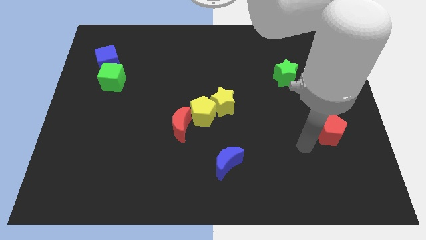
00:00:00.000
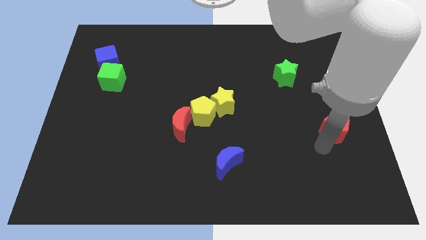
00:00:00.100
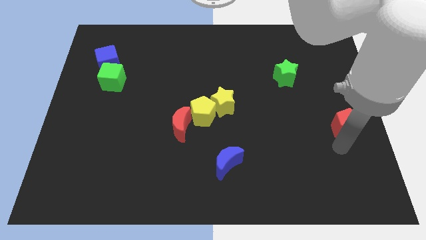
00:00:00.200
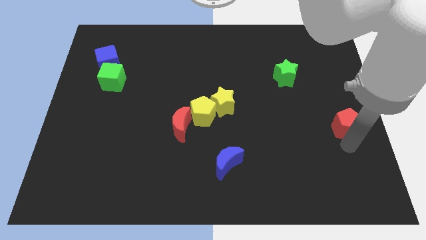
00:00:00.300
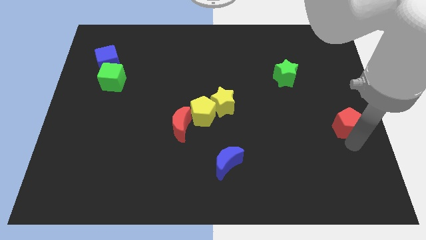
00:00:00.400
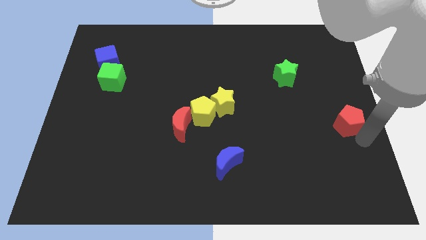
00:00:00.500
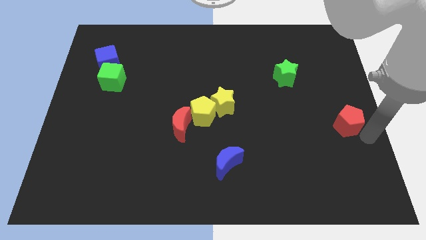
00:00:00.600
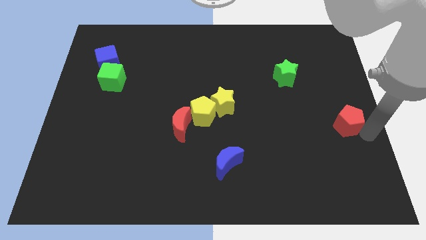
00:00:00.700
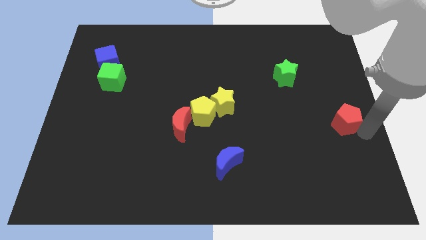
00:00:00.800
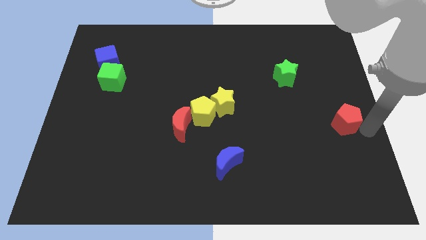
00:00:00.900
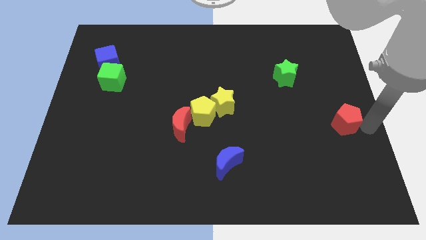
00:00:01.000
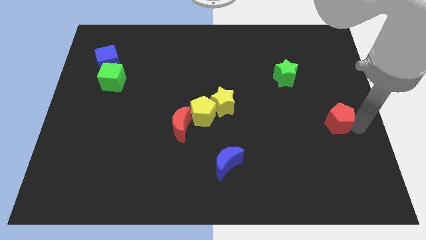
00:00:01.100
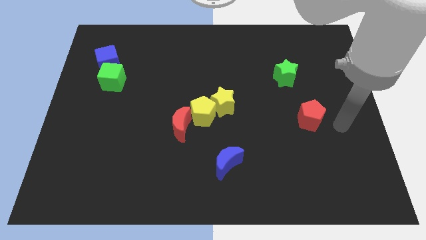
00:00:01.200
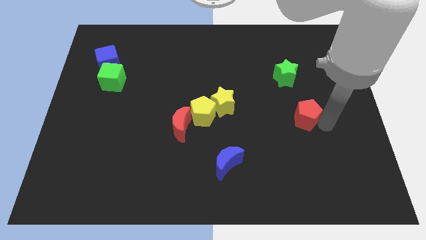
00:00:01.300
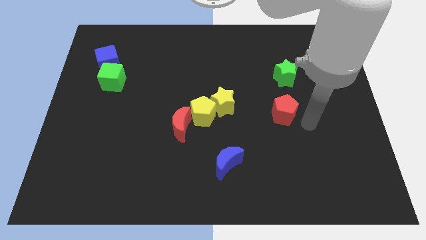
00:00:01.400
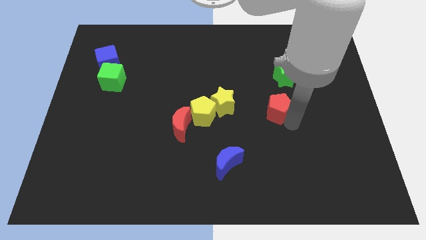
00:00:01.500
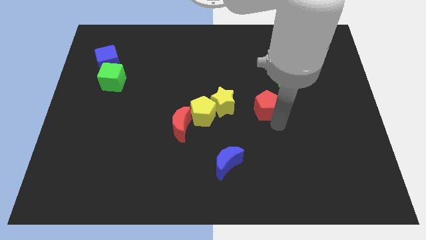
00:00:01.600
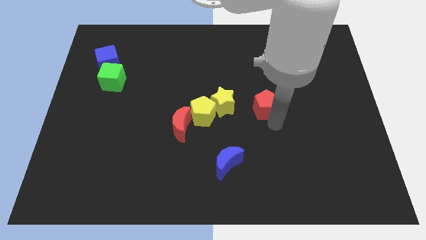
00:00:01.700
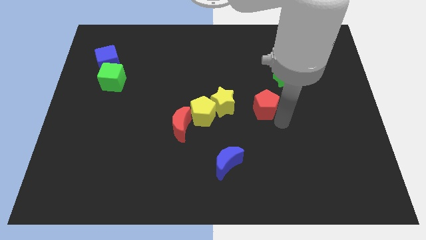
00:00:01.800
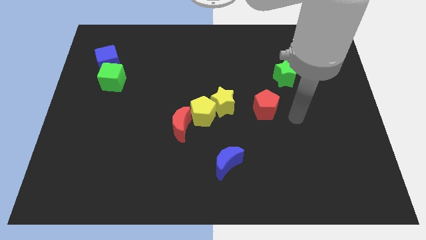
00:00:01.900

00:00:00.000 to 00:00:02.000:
push the red pentagon slightly closer to the yellow star

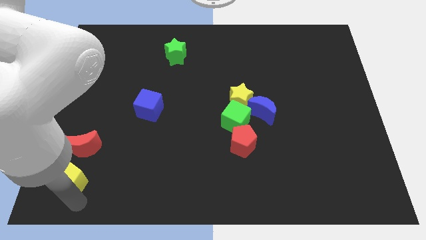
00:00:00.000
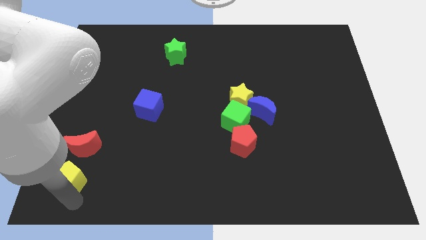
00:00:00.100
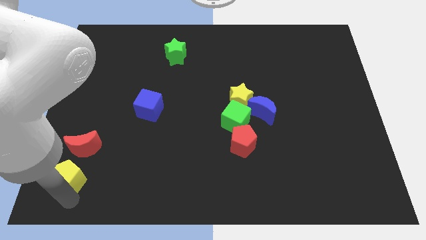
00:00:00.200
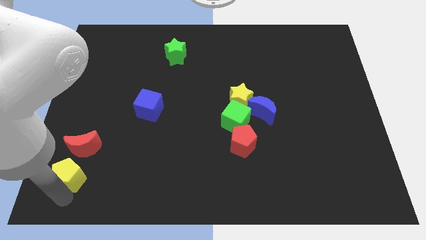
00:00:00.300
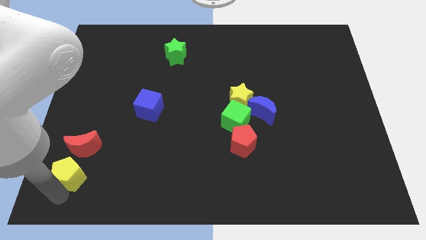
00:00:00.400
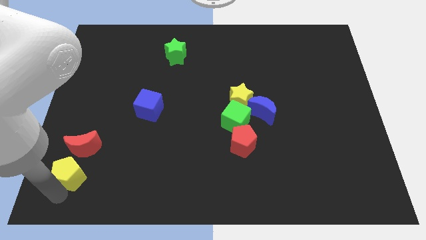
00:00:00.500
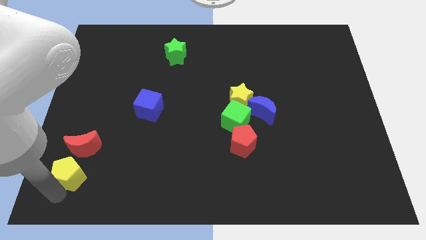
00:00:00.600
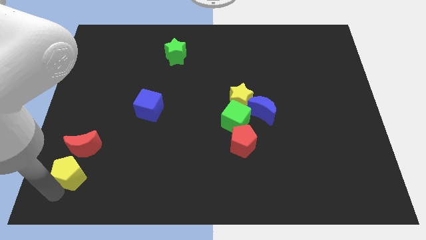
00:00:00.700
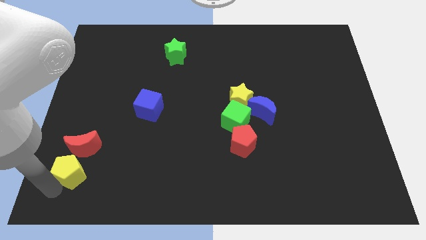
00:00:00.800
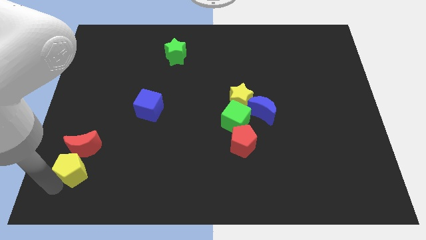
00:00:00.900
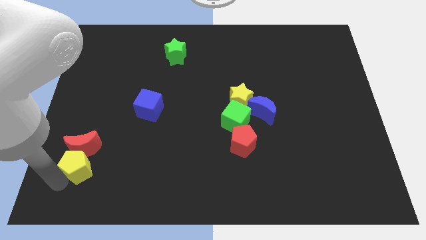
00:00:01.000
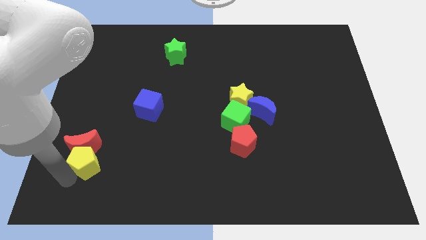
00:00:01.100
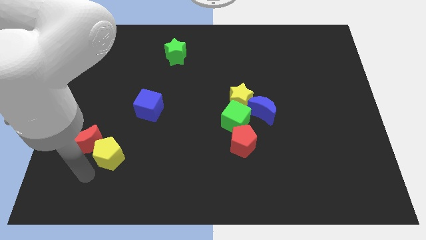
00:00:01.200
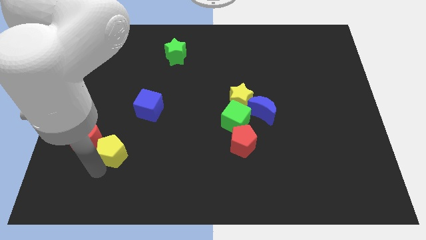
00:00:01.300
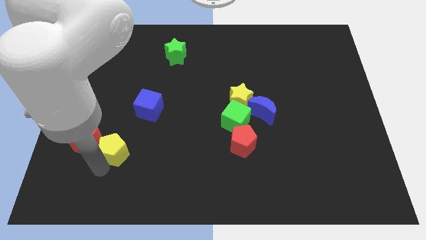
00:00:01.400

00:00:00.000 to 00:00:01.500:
move the yellow pentagon into the red crescent

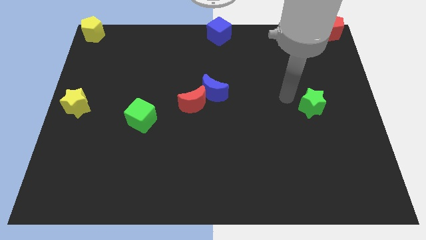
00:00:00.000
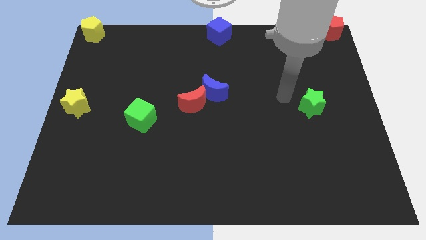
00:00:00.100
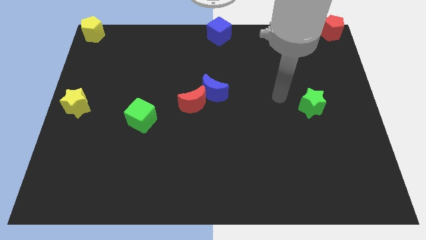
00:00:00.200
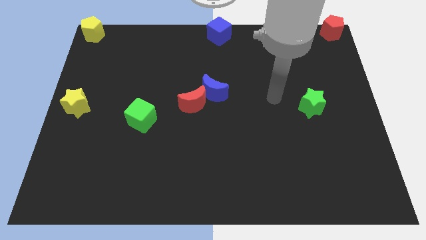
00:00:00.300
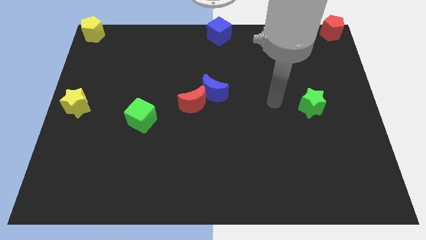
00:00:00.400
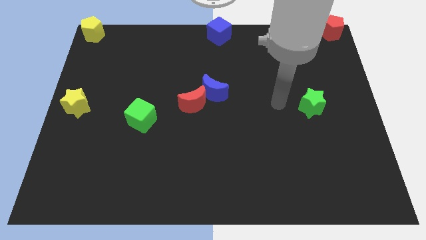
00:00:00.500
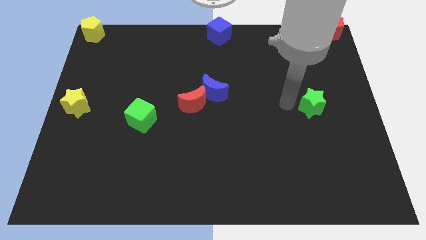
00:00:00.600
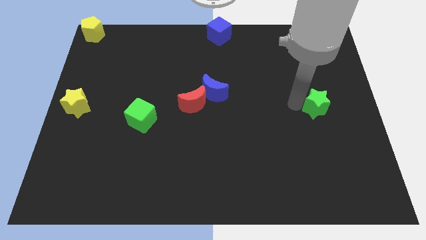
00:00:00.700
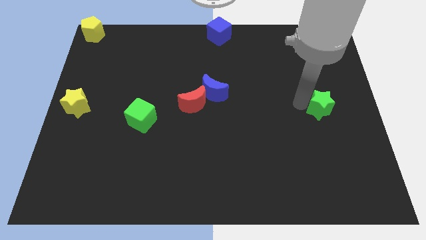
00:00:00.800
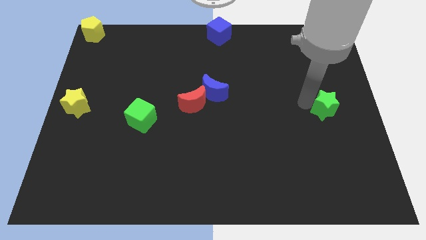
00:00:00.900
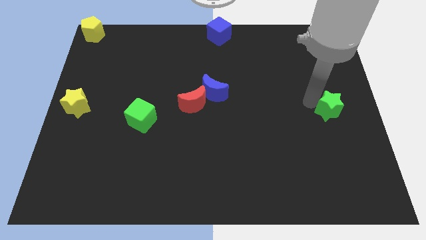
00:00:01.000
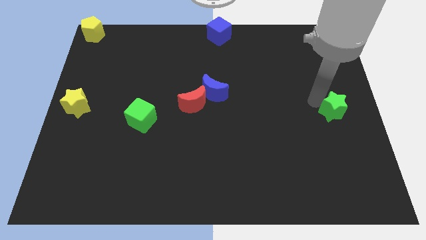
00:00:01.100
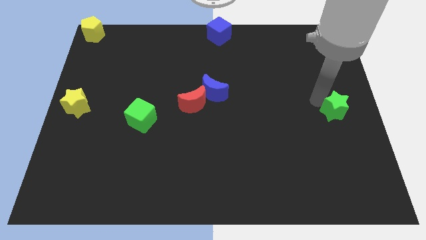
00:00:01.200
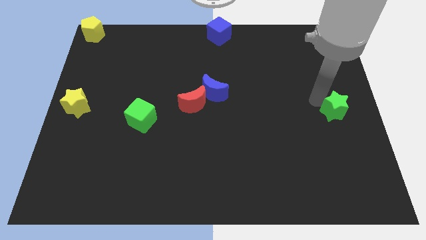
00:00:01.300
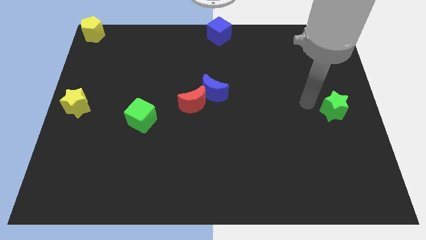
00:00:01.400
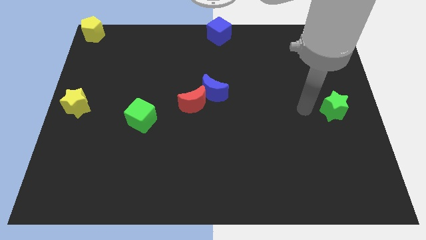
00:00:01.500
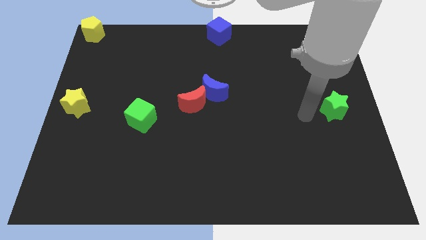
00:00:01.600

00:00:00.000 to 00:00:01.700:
place the green star at the right center of the board

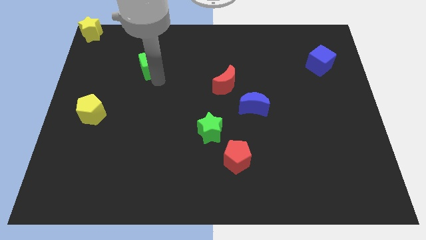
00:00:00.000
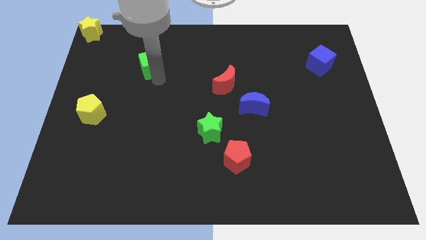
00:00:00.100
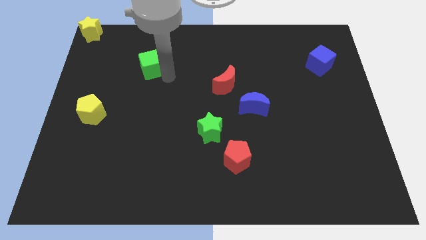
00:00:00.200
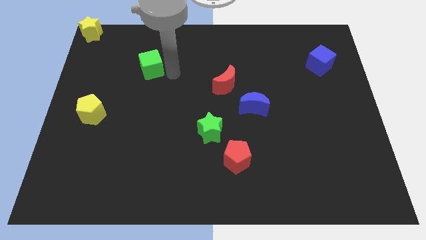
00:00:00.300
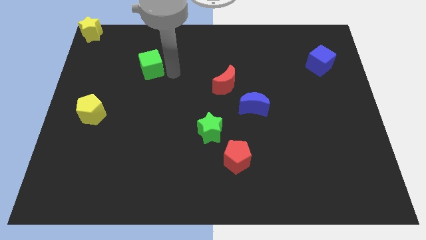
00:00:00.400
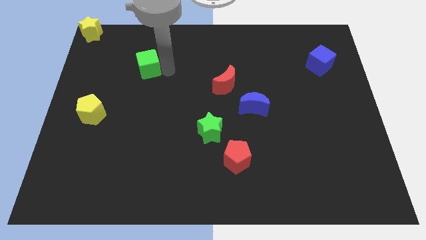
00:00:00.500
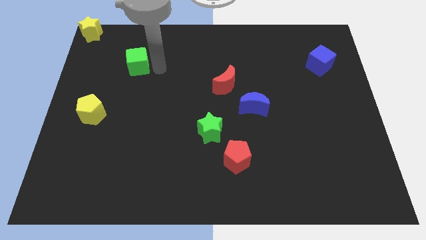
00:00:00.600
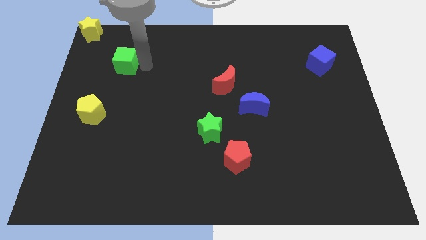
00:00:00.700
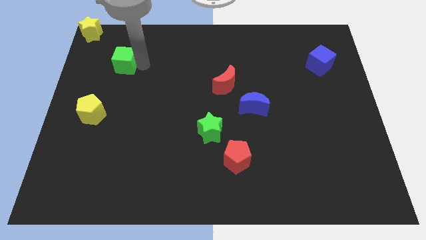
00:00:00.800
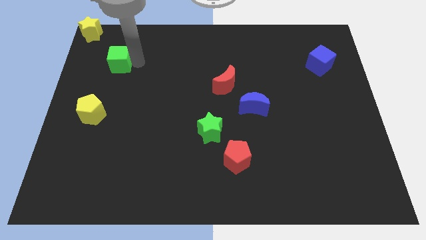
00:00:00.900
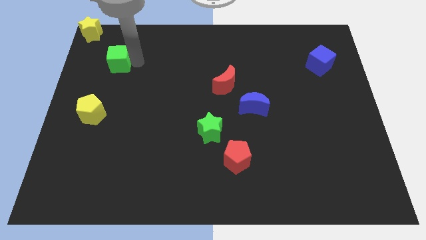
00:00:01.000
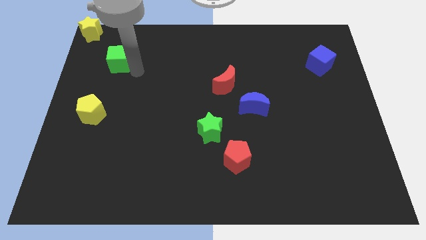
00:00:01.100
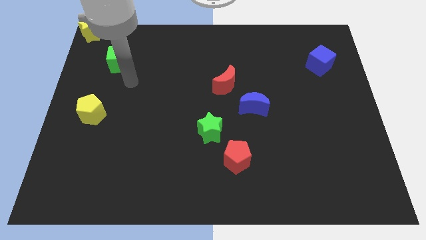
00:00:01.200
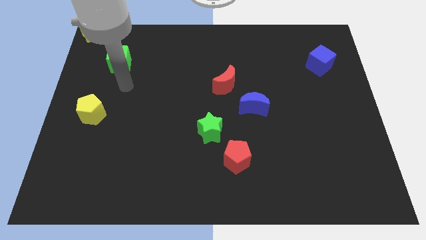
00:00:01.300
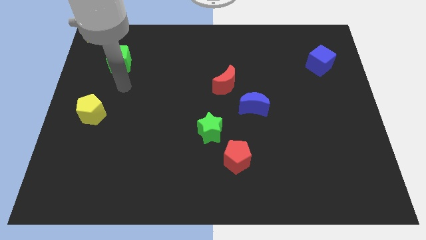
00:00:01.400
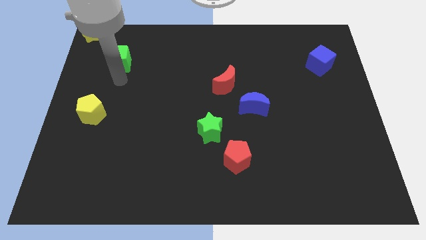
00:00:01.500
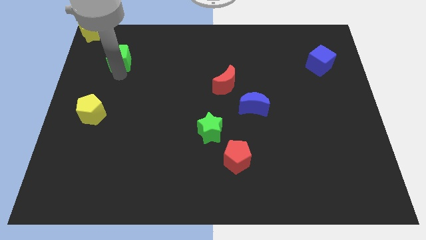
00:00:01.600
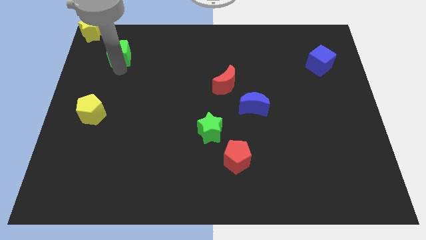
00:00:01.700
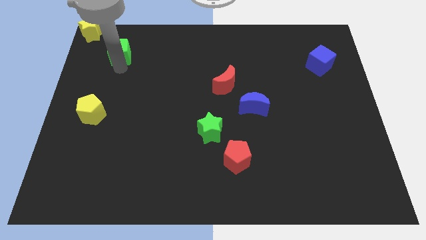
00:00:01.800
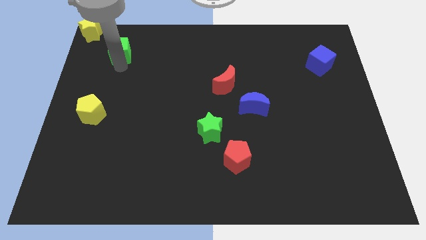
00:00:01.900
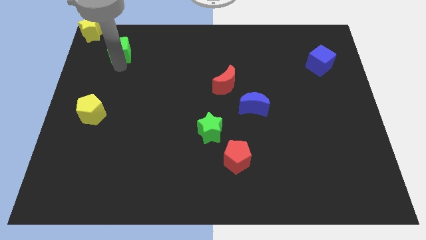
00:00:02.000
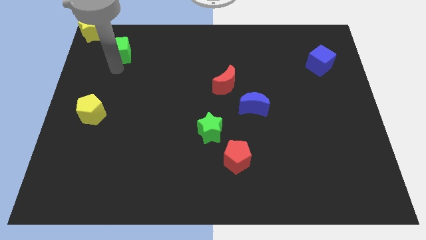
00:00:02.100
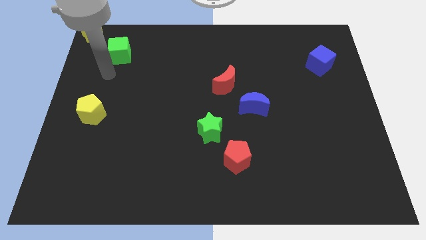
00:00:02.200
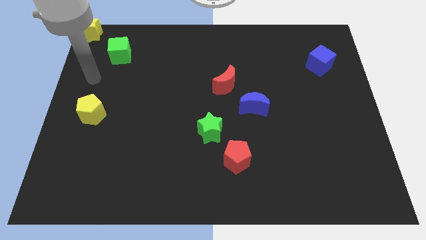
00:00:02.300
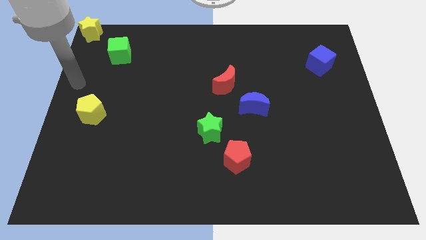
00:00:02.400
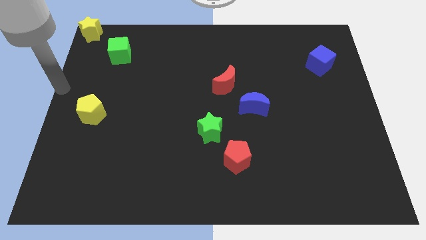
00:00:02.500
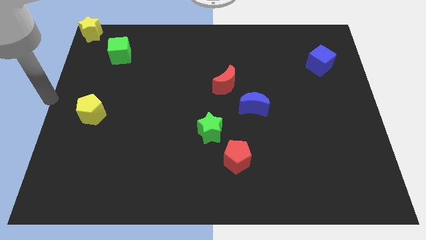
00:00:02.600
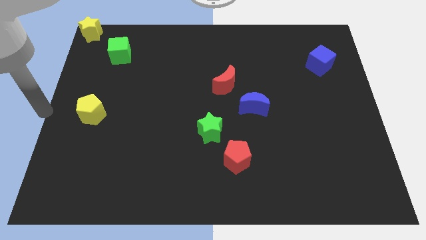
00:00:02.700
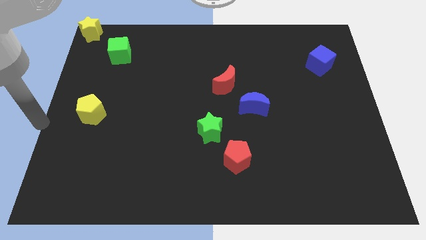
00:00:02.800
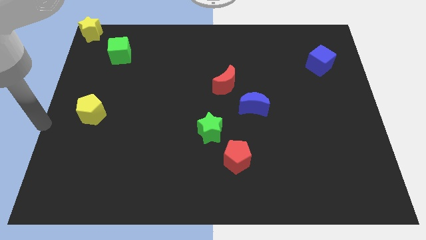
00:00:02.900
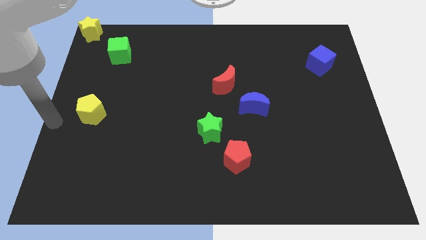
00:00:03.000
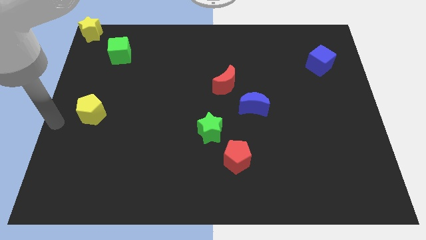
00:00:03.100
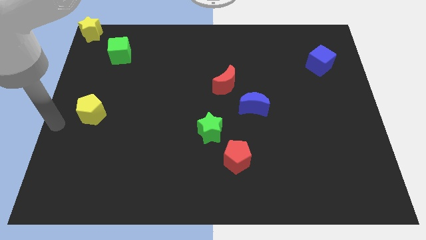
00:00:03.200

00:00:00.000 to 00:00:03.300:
place the green cube below the bottom right of the yellow star

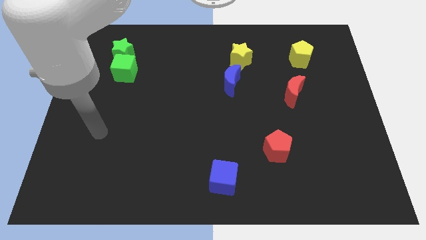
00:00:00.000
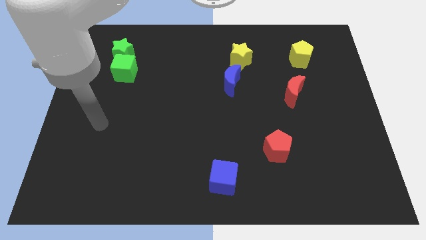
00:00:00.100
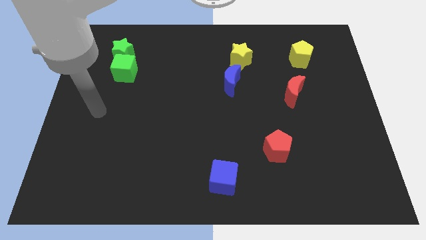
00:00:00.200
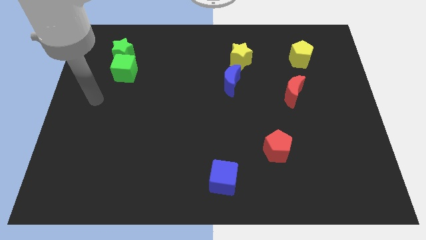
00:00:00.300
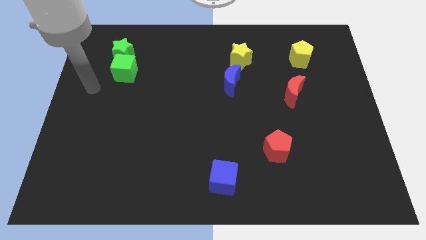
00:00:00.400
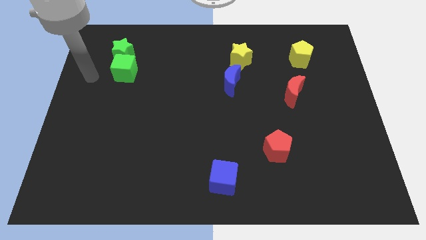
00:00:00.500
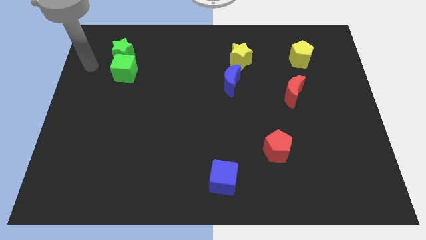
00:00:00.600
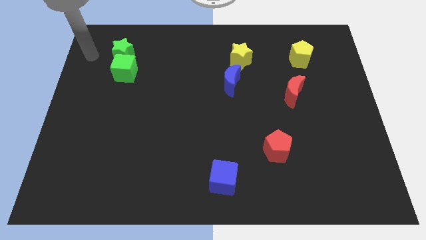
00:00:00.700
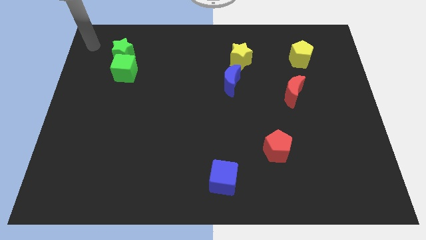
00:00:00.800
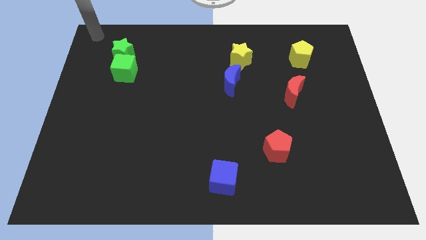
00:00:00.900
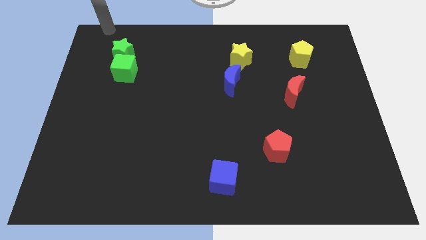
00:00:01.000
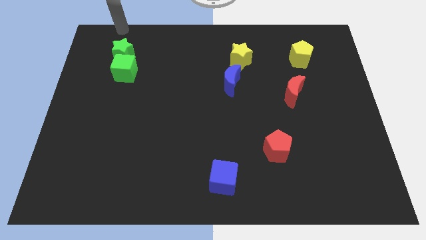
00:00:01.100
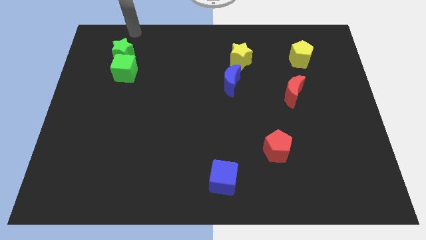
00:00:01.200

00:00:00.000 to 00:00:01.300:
point your hand above the green star